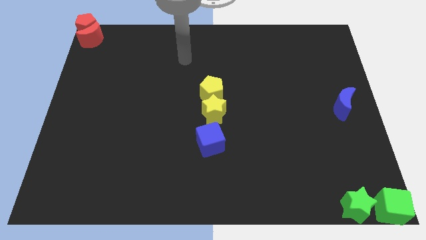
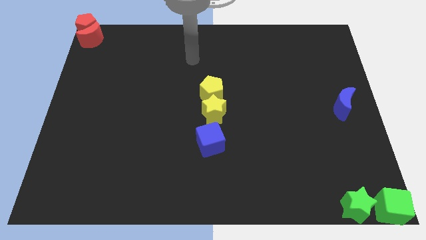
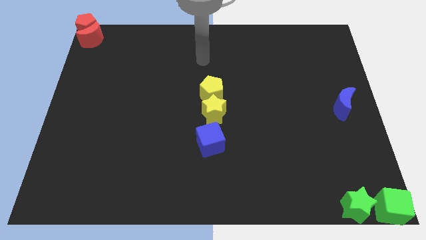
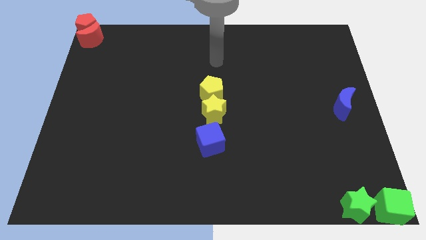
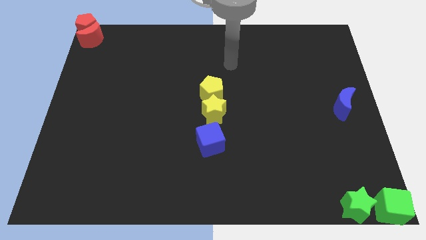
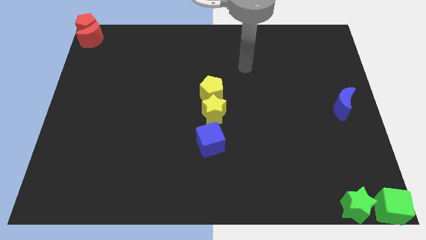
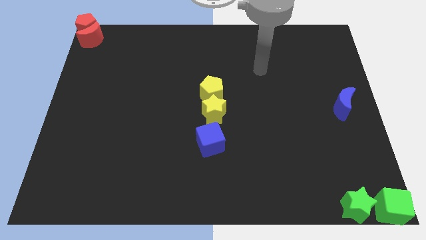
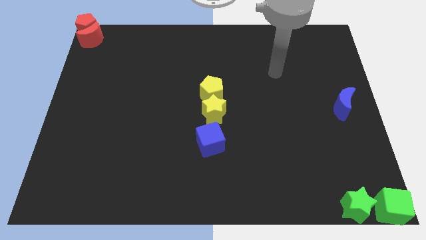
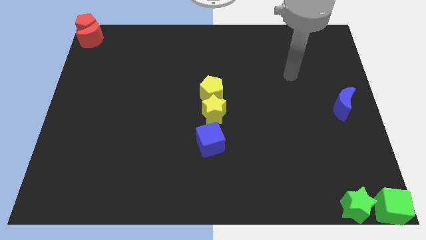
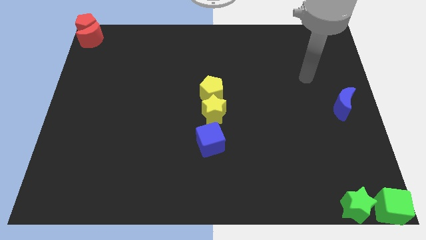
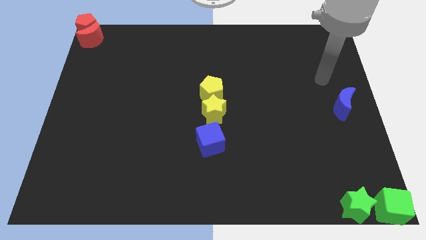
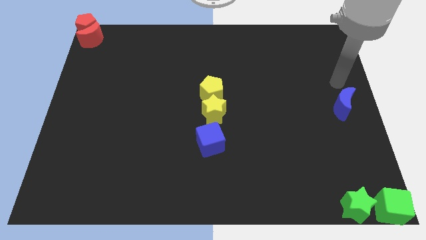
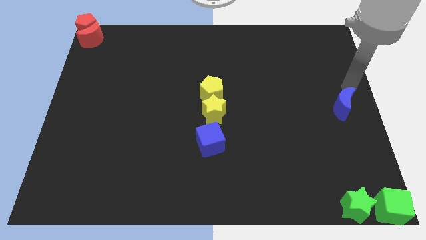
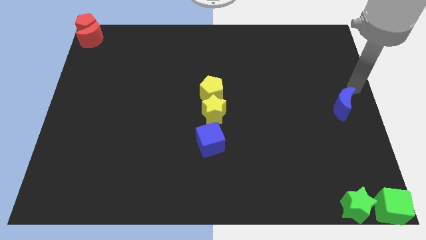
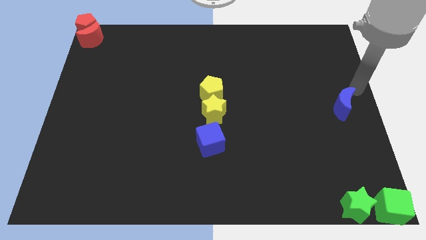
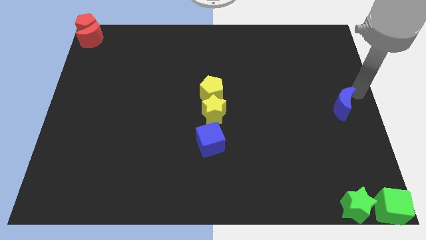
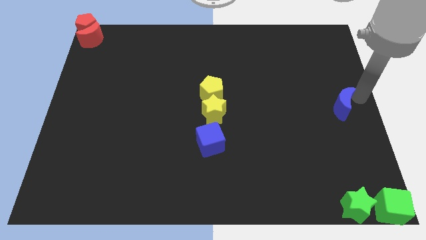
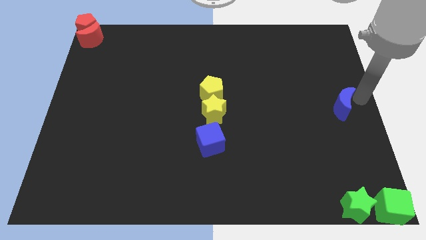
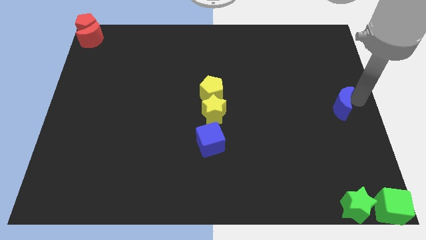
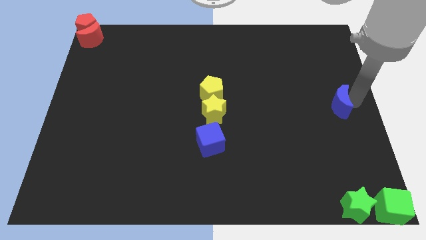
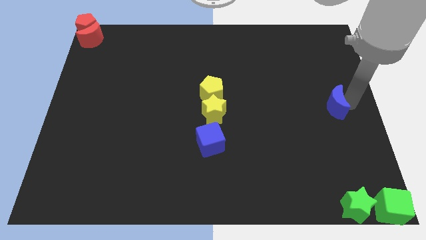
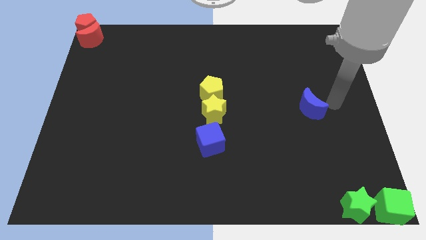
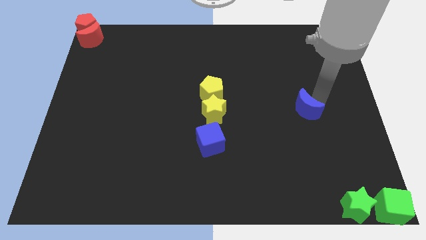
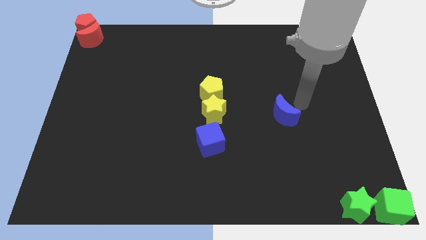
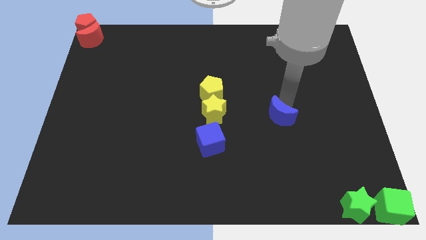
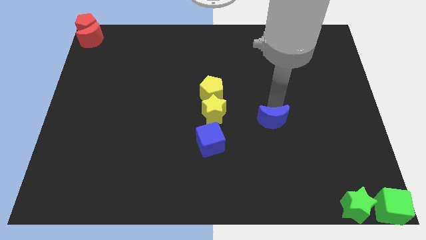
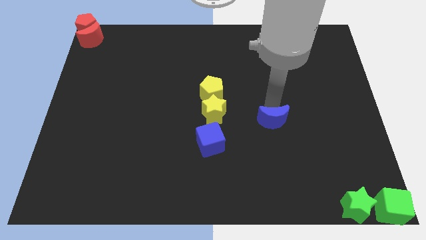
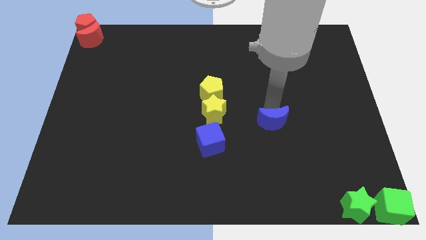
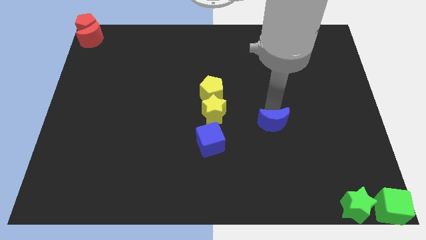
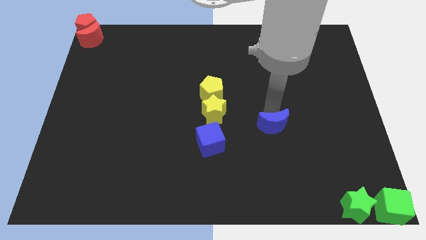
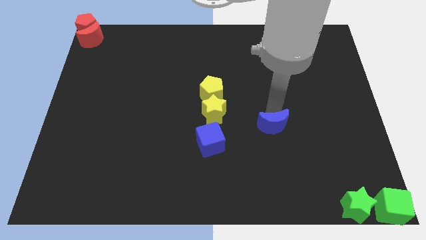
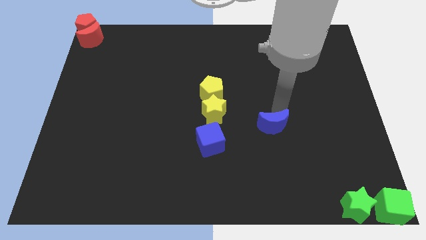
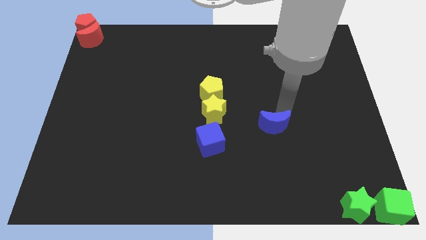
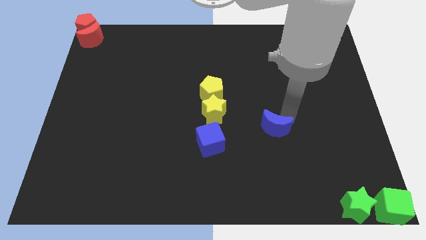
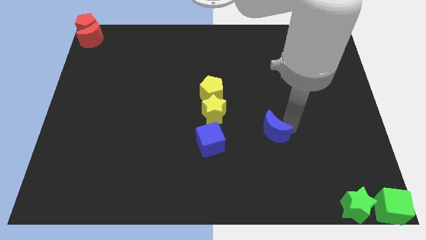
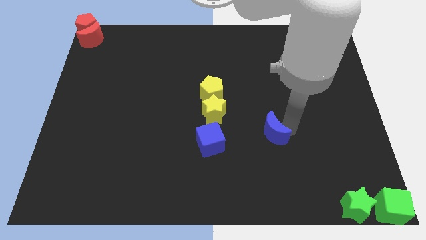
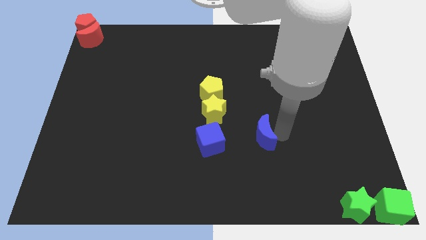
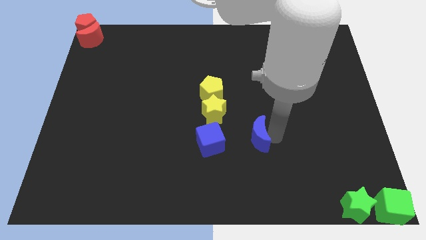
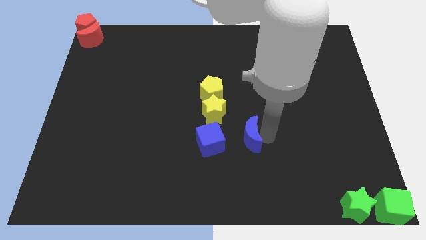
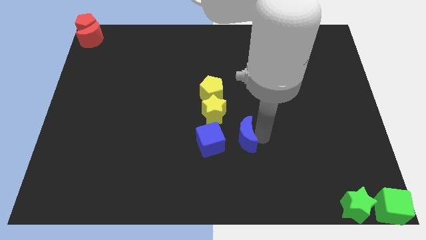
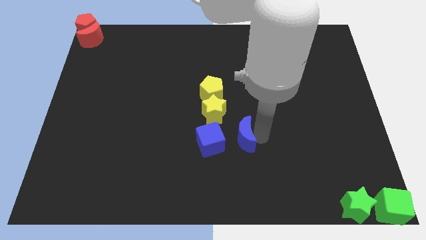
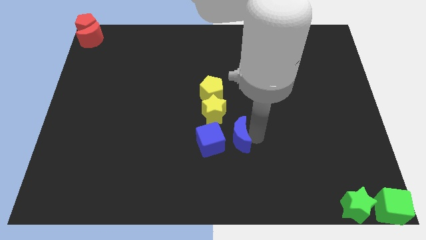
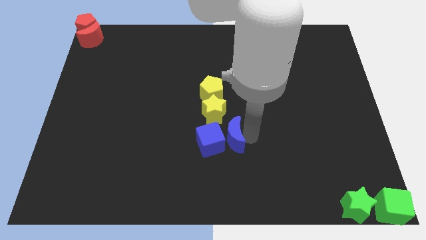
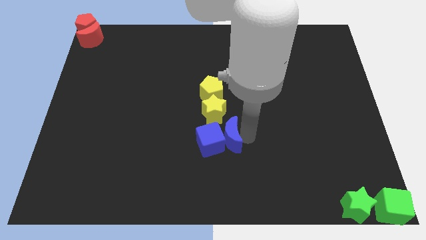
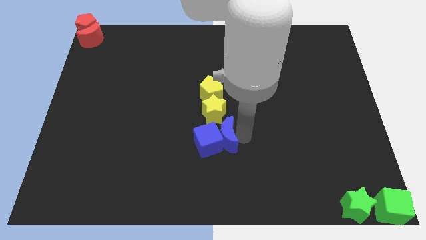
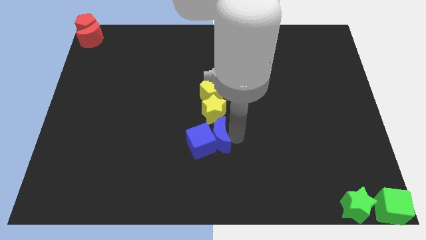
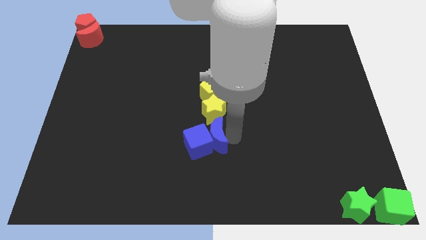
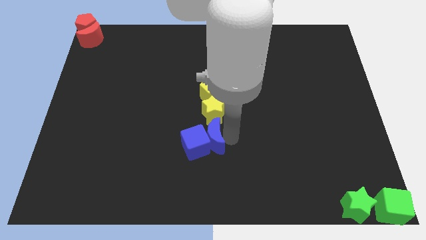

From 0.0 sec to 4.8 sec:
push the blue crescent into the blue cube

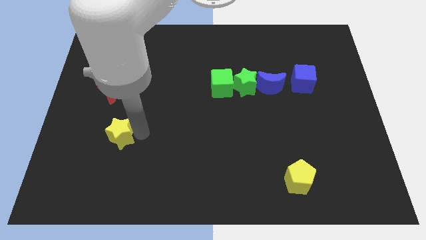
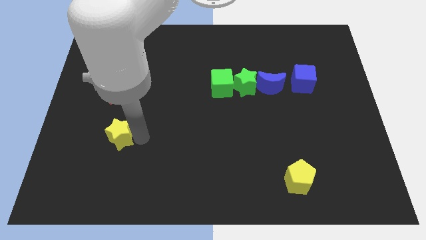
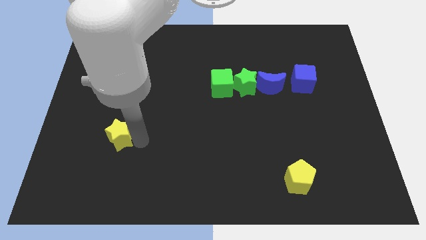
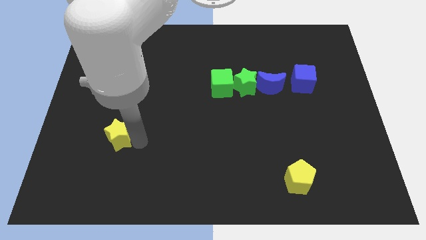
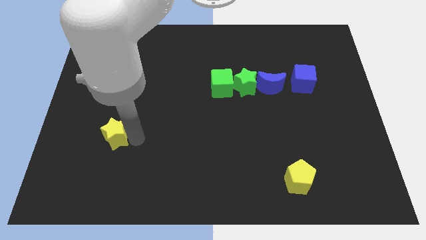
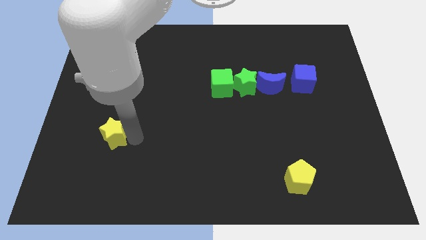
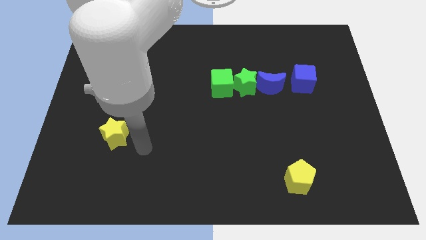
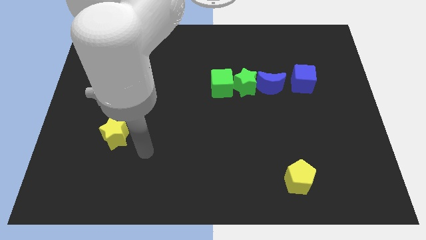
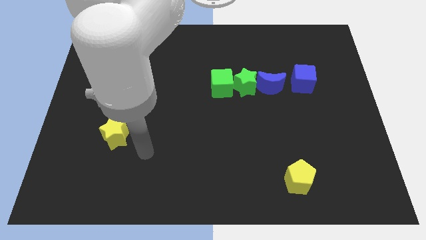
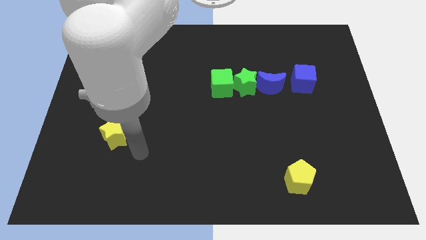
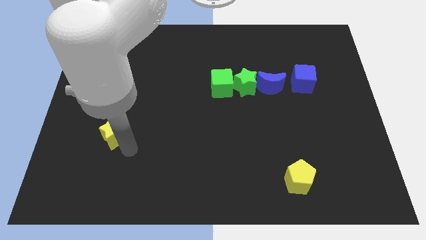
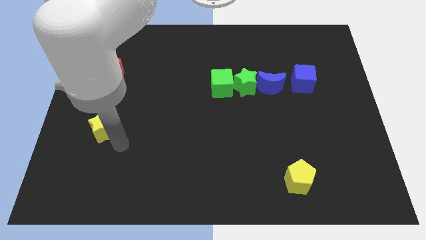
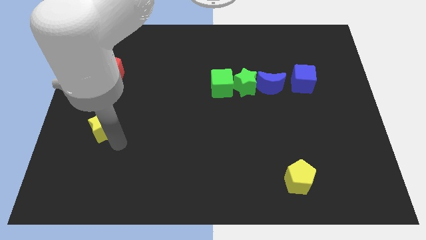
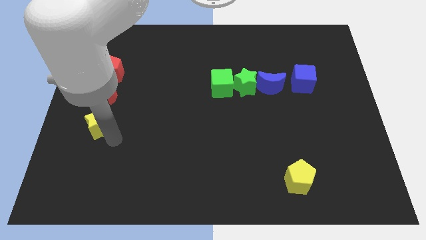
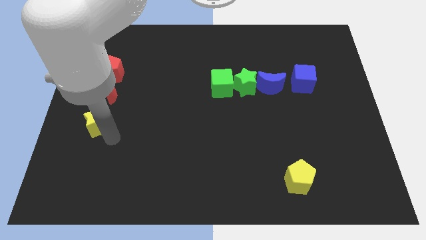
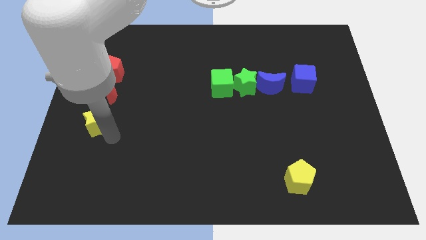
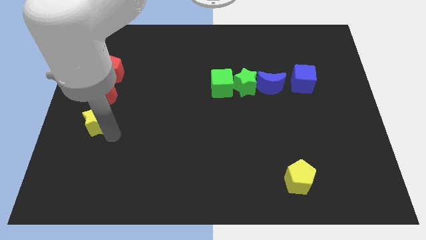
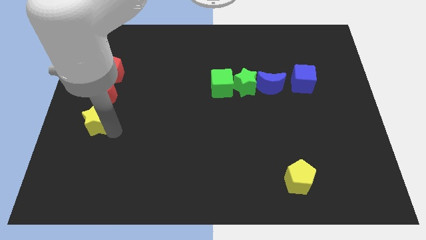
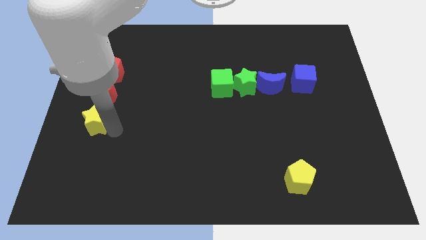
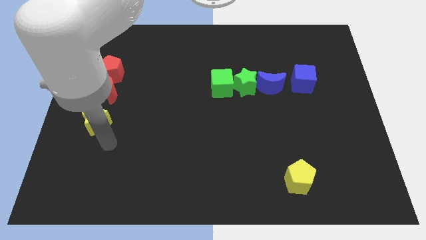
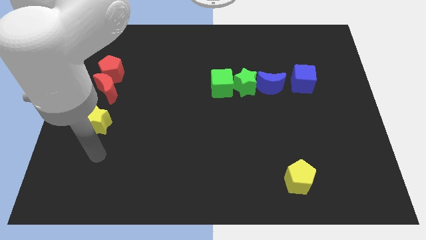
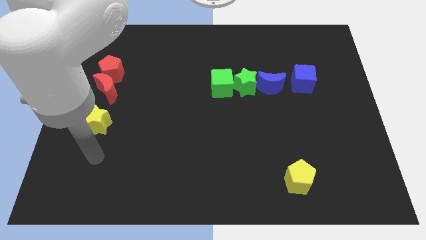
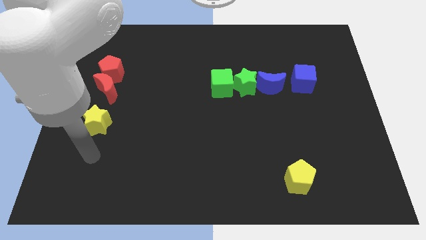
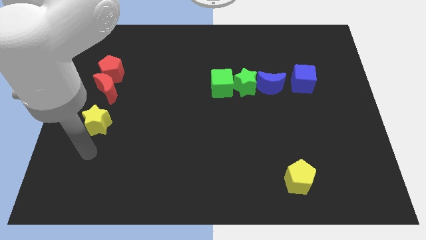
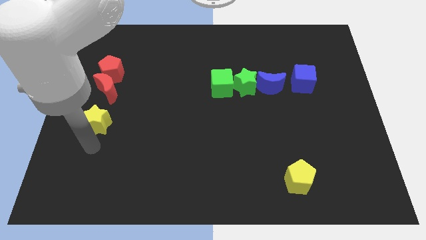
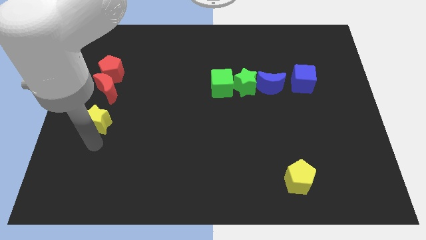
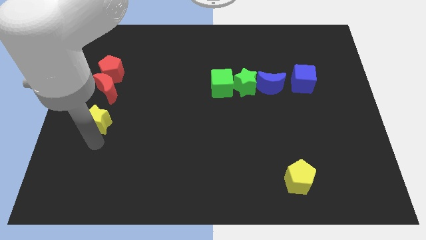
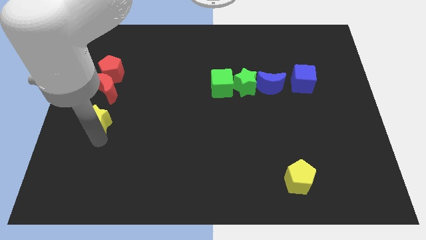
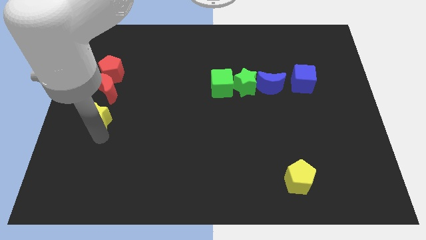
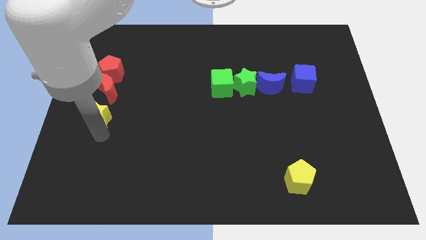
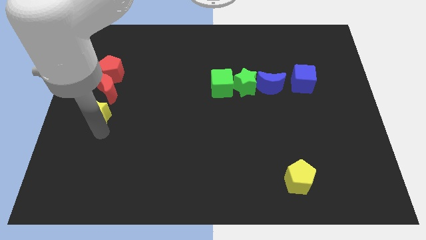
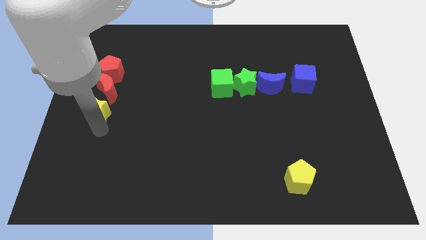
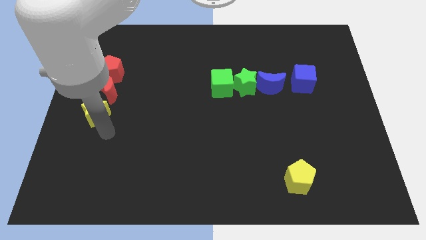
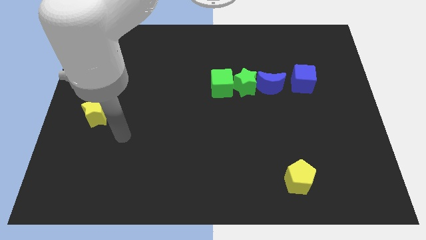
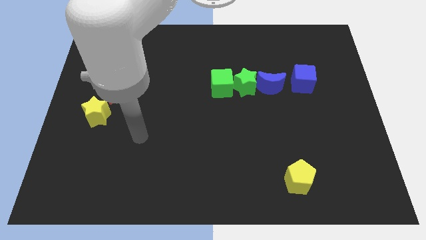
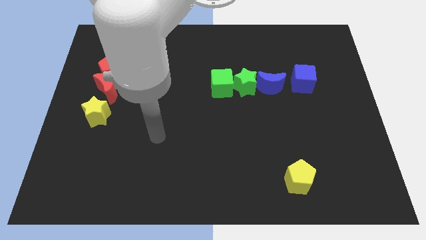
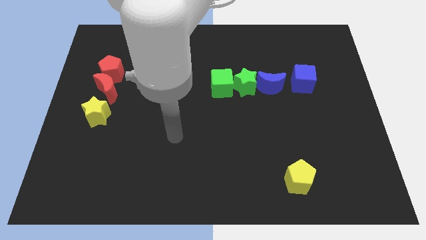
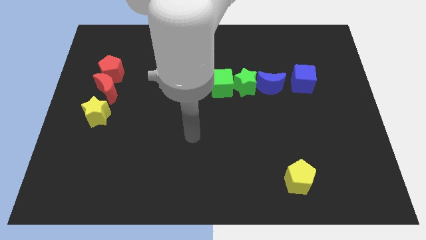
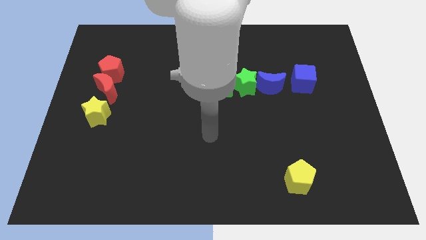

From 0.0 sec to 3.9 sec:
move yellow star into red moon

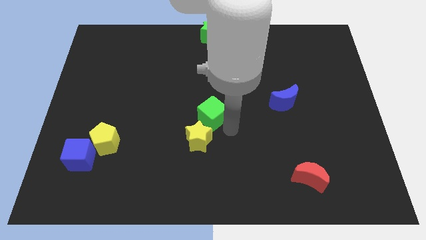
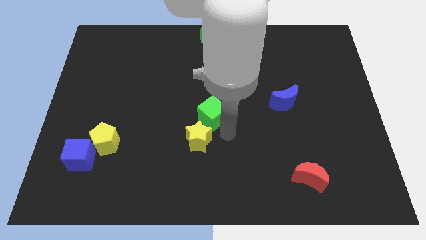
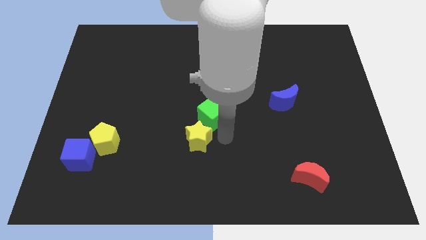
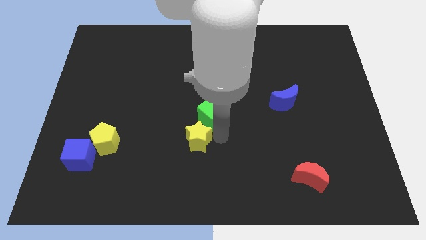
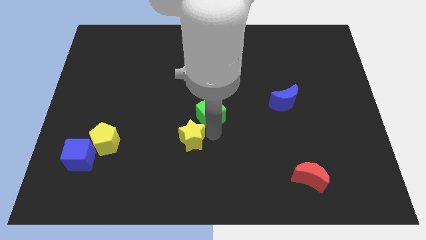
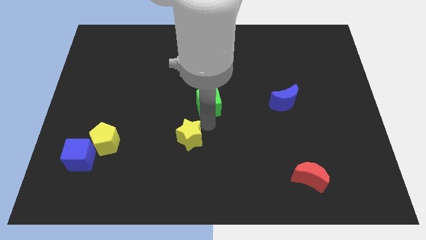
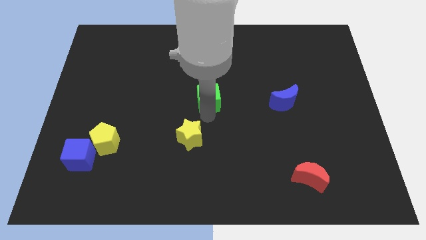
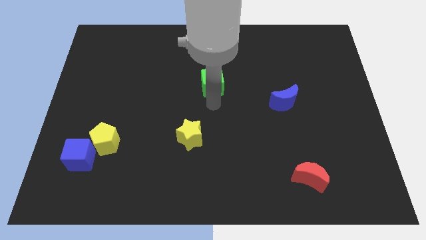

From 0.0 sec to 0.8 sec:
drag the green cube towards the top
